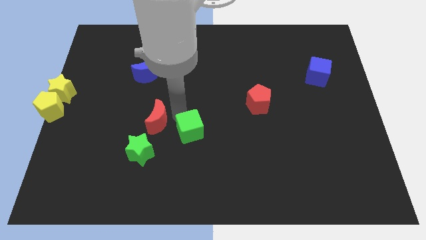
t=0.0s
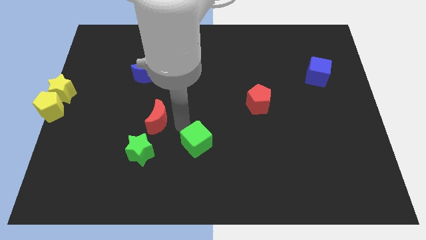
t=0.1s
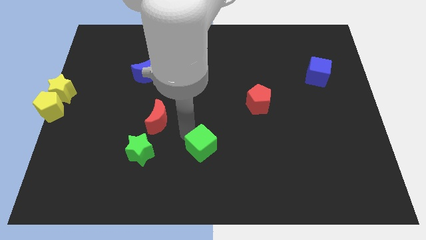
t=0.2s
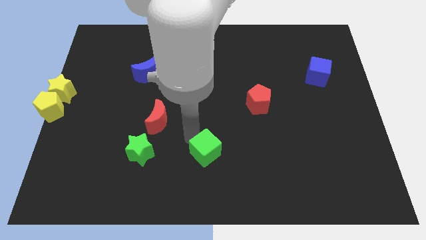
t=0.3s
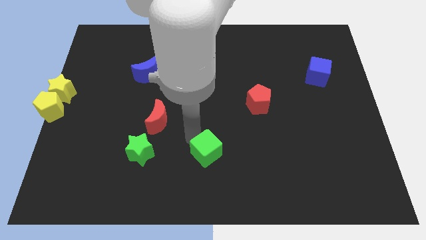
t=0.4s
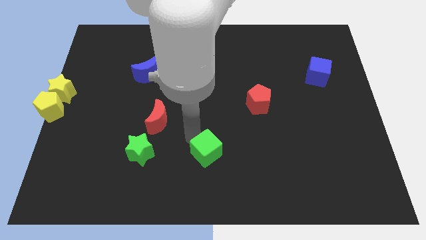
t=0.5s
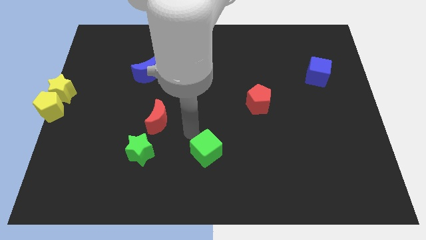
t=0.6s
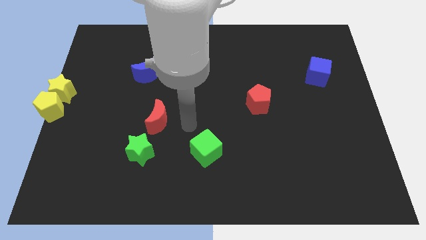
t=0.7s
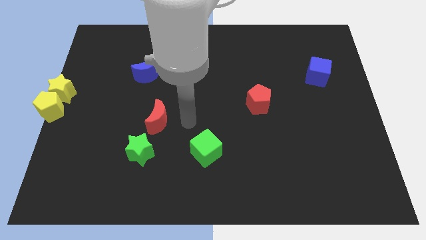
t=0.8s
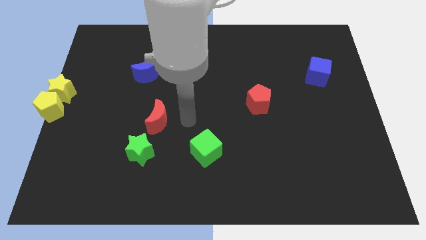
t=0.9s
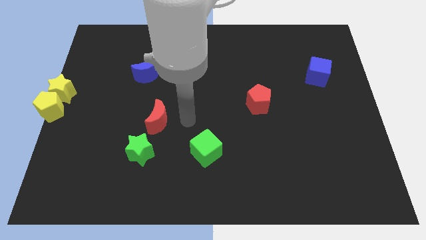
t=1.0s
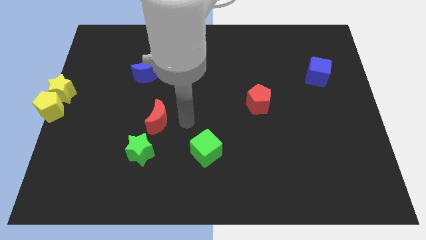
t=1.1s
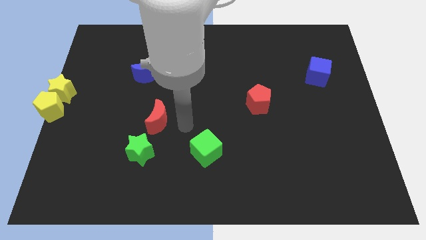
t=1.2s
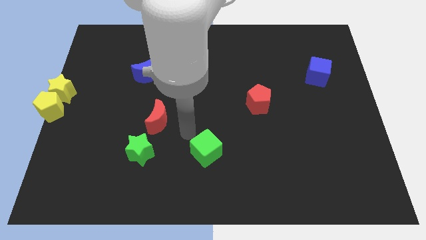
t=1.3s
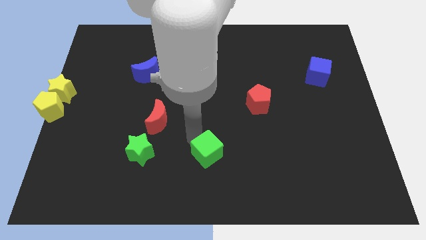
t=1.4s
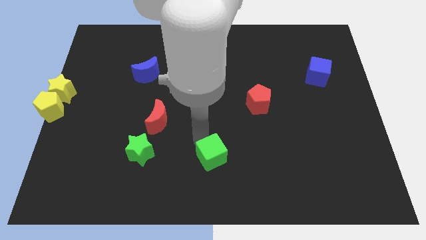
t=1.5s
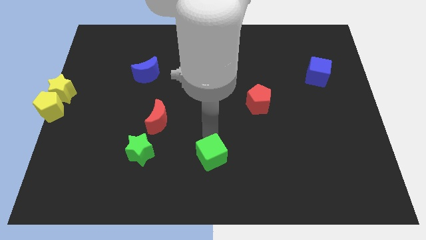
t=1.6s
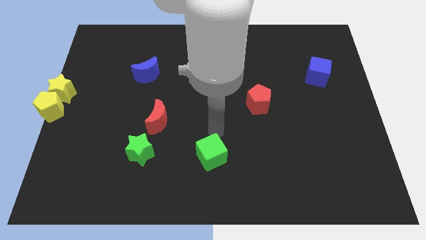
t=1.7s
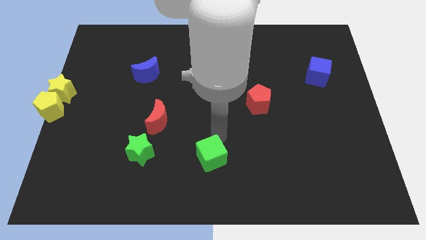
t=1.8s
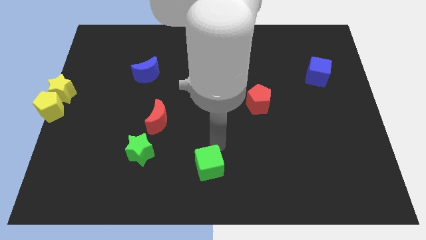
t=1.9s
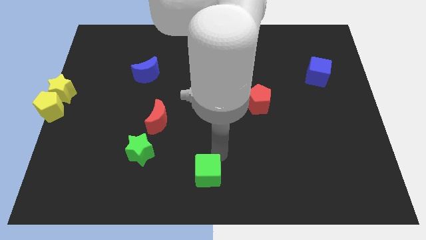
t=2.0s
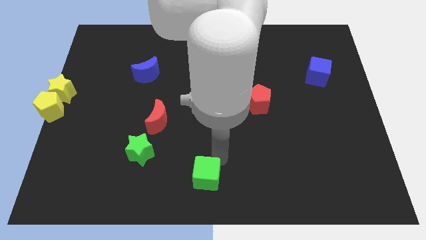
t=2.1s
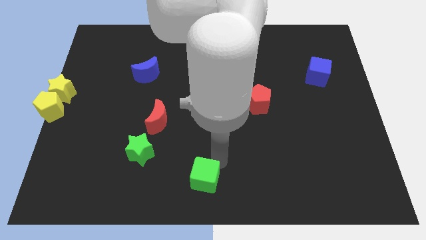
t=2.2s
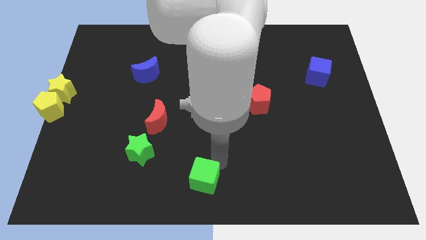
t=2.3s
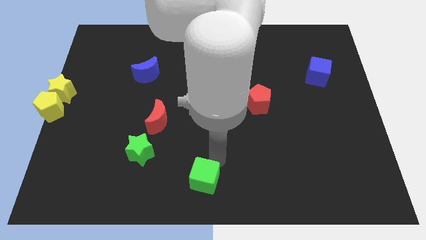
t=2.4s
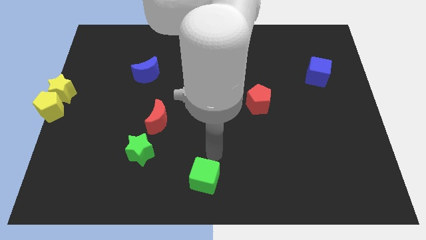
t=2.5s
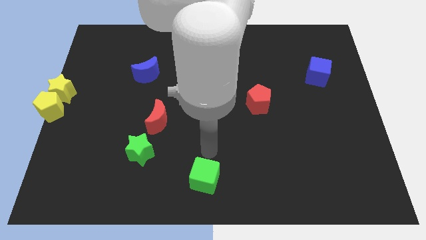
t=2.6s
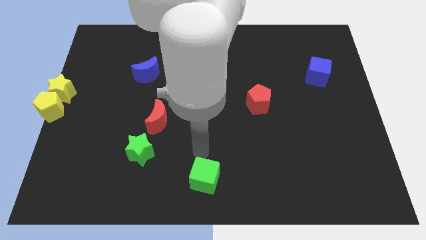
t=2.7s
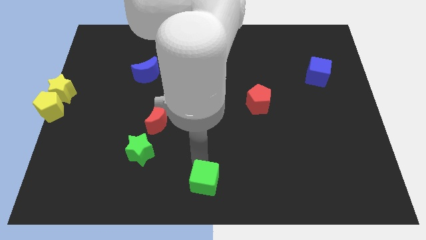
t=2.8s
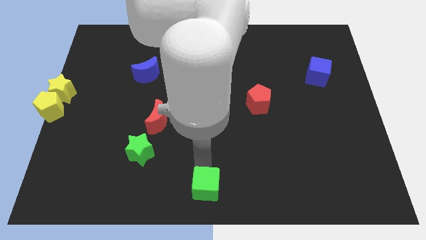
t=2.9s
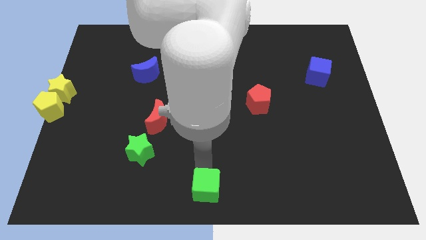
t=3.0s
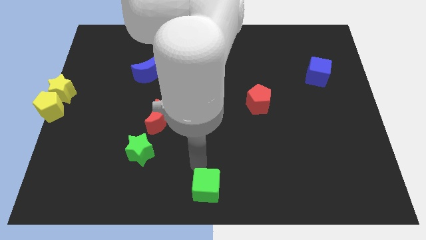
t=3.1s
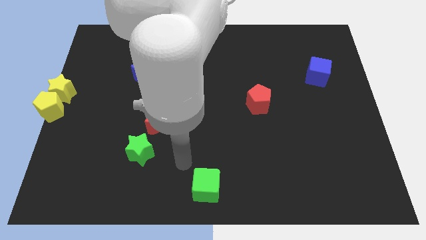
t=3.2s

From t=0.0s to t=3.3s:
push the green cube to the bottom center of the table

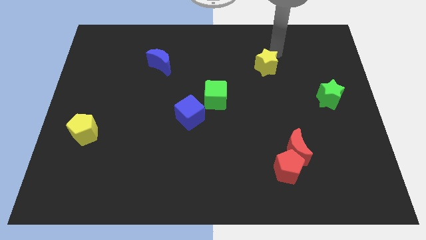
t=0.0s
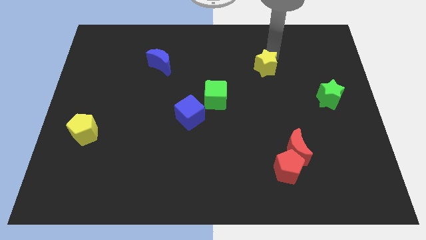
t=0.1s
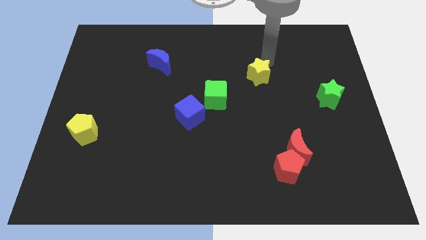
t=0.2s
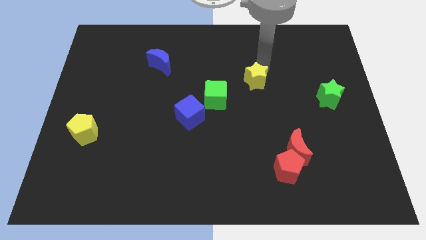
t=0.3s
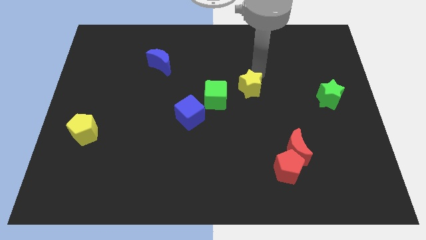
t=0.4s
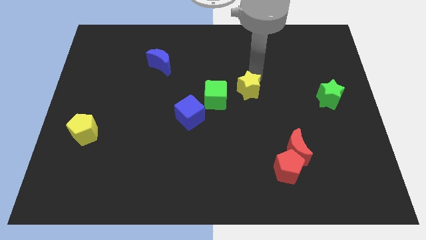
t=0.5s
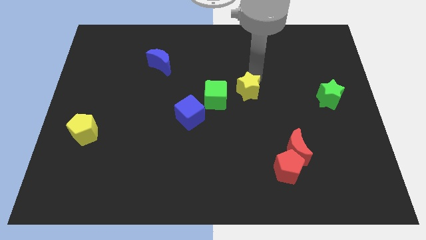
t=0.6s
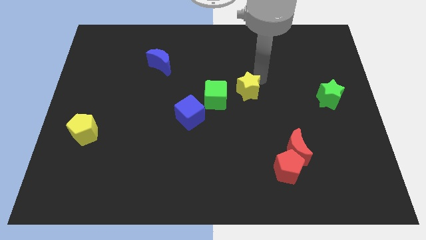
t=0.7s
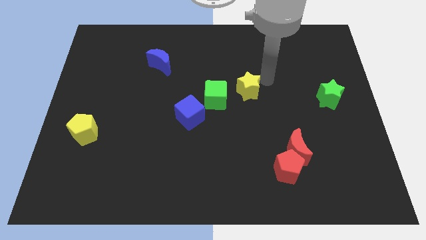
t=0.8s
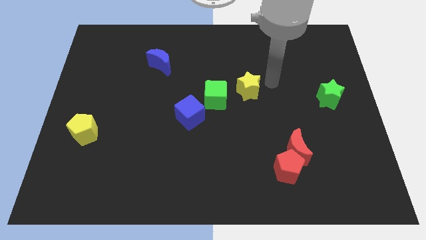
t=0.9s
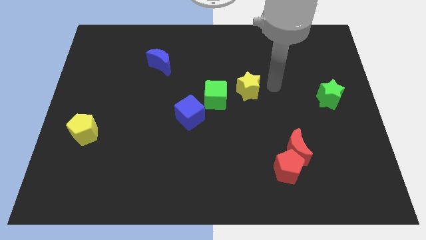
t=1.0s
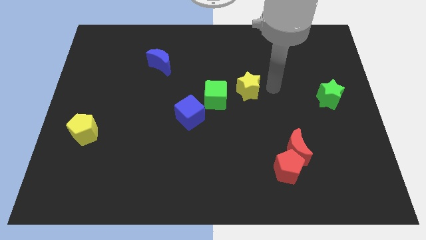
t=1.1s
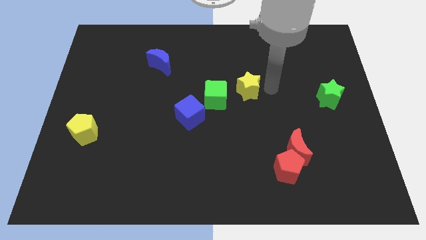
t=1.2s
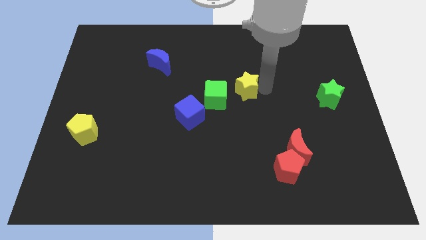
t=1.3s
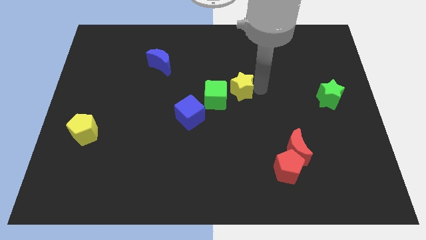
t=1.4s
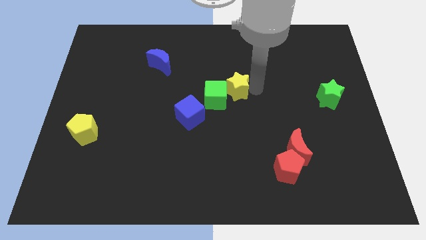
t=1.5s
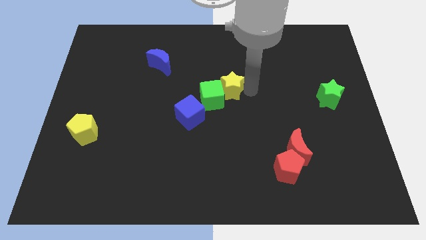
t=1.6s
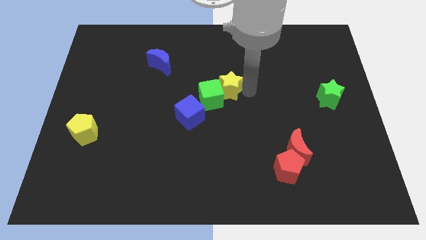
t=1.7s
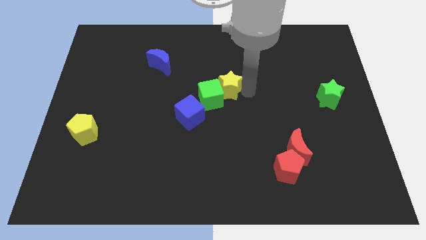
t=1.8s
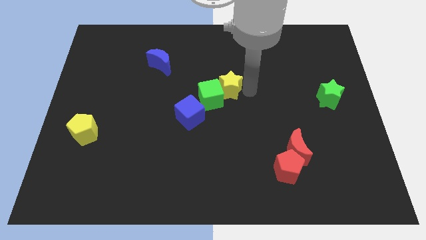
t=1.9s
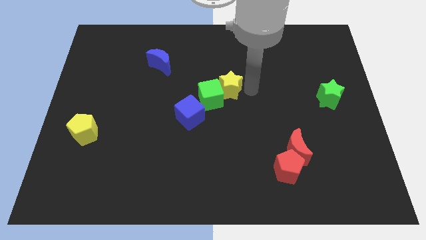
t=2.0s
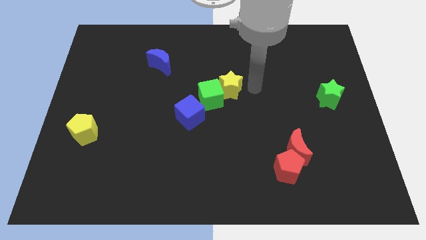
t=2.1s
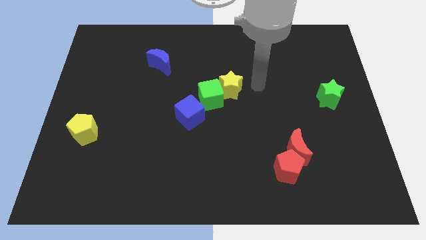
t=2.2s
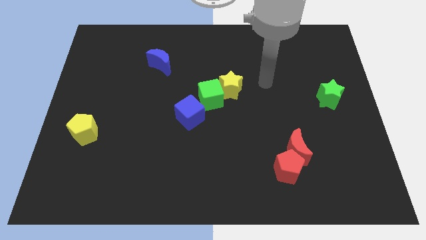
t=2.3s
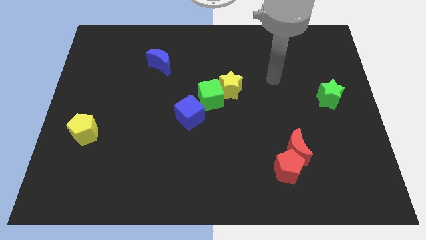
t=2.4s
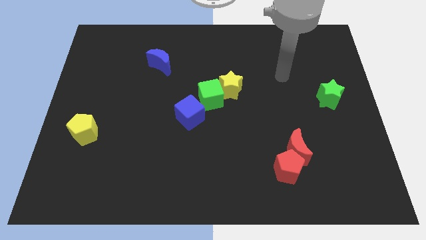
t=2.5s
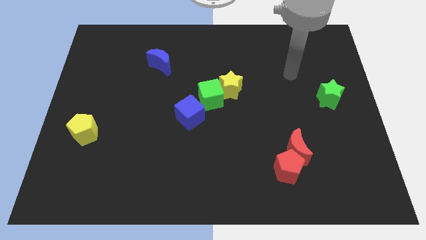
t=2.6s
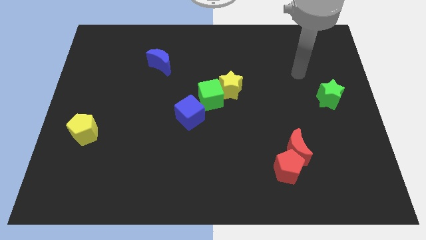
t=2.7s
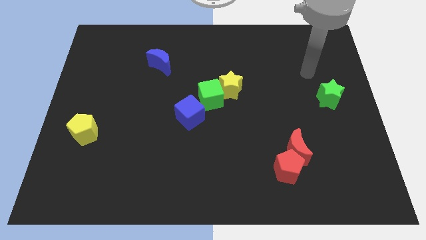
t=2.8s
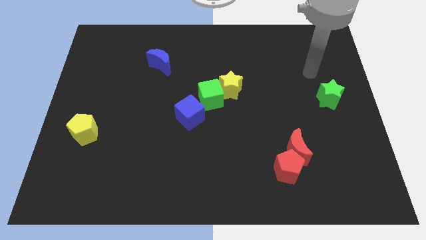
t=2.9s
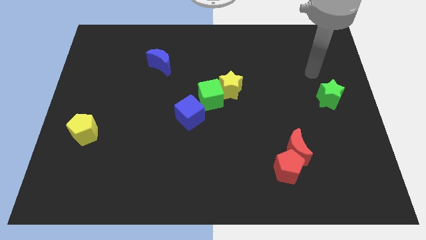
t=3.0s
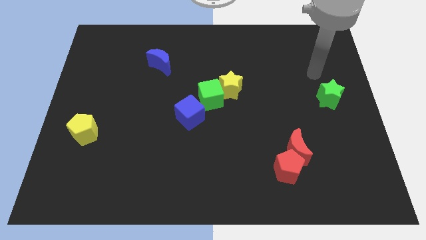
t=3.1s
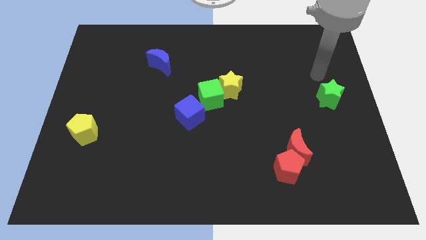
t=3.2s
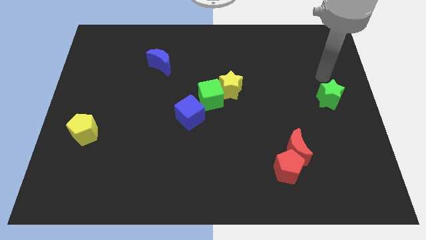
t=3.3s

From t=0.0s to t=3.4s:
push the yellow star into the green cube

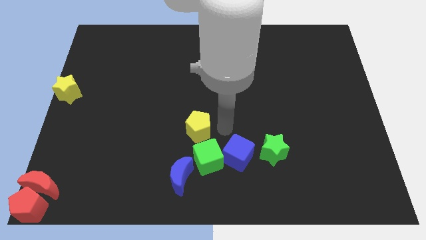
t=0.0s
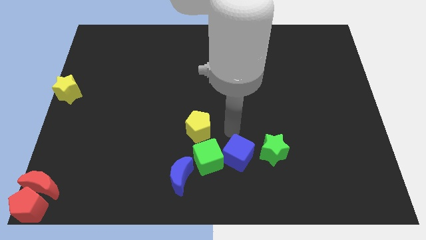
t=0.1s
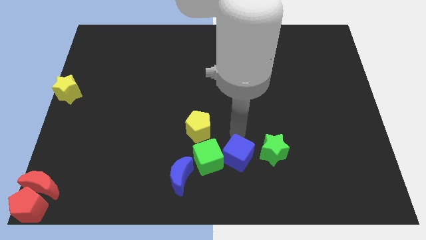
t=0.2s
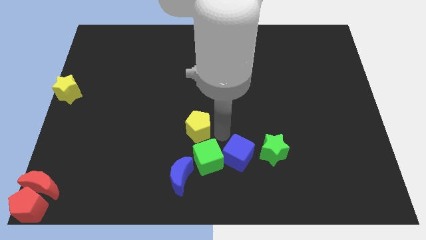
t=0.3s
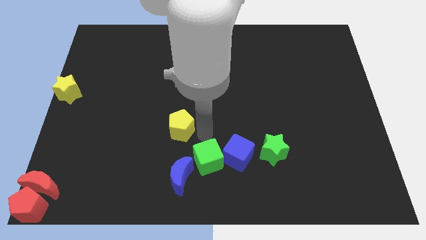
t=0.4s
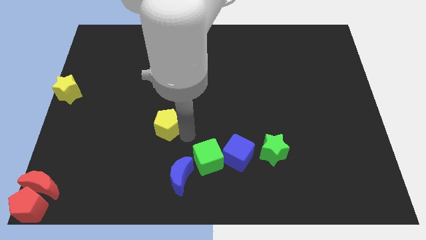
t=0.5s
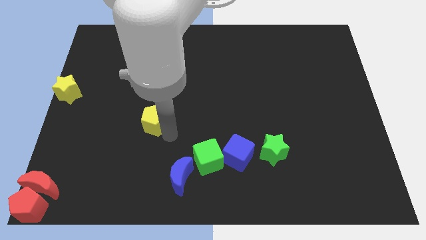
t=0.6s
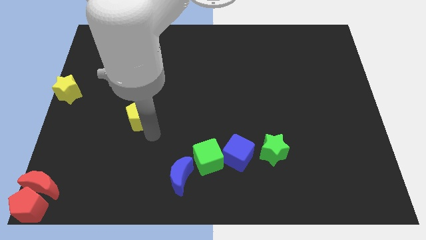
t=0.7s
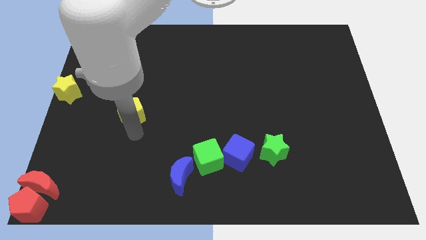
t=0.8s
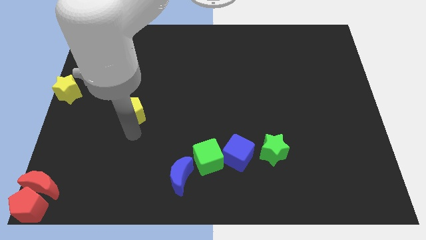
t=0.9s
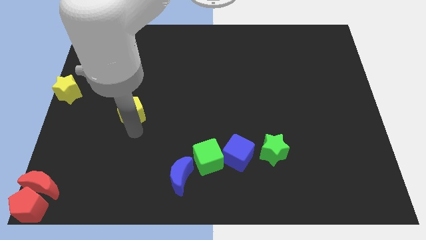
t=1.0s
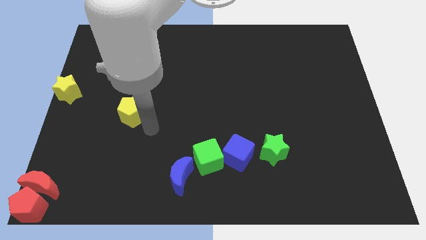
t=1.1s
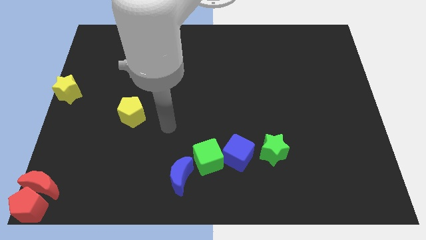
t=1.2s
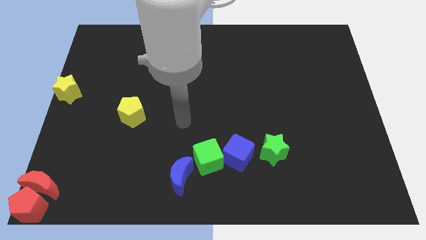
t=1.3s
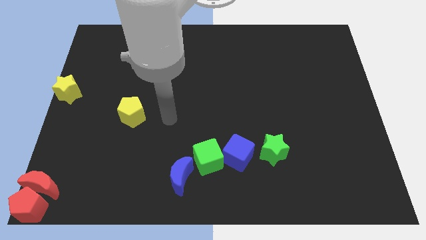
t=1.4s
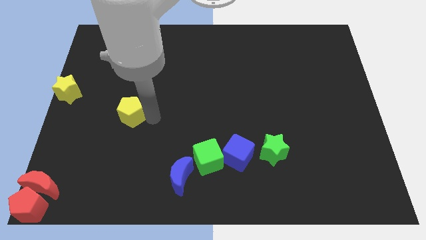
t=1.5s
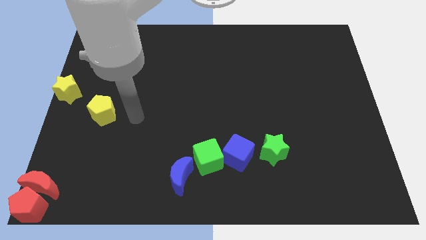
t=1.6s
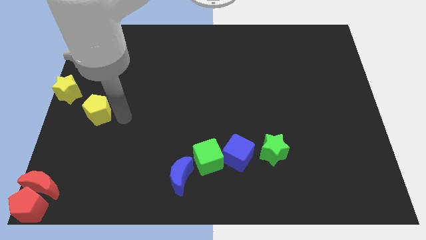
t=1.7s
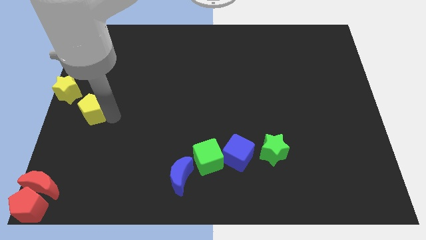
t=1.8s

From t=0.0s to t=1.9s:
place the yellow pentagon towards the slightly bottom right side of the yellow star

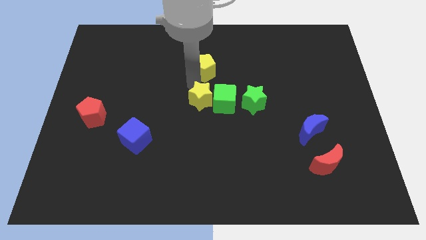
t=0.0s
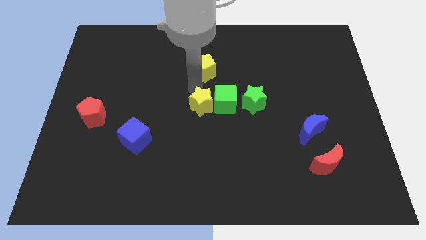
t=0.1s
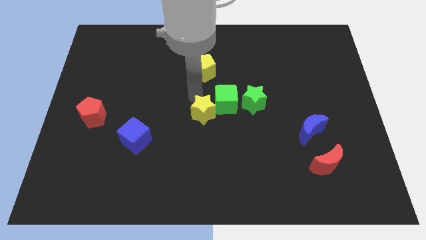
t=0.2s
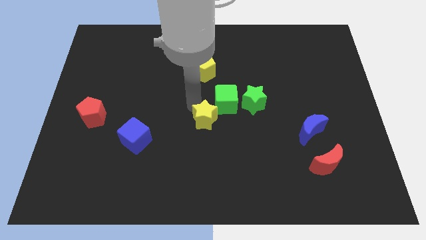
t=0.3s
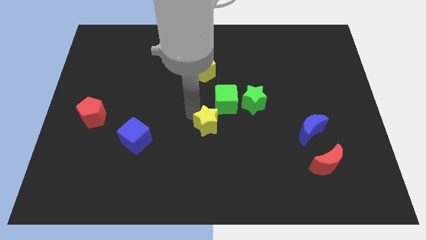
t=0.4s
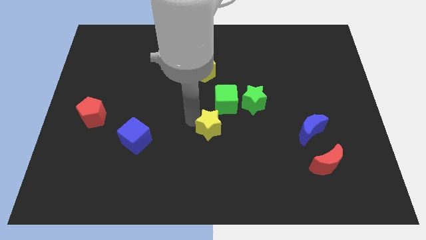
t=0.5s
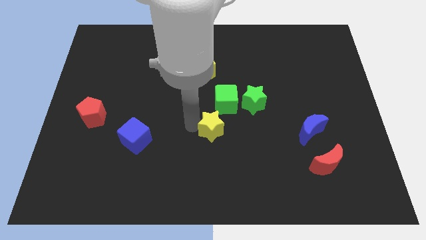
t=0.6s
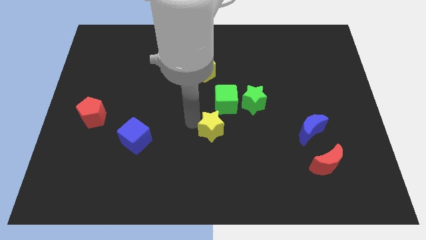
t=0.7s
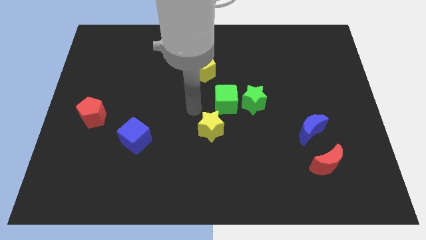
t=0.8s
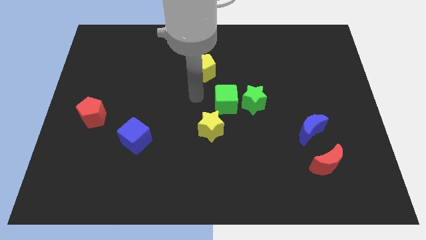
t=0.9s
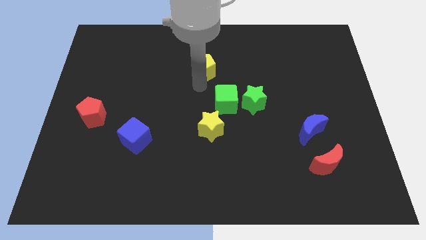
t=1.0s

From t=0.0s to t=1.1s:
push the yellow star to the bottom left of the green cube
